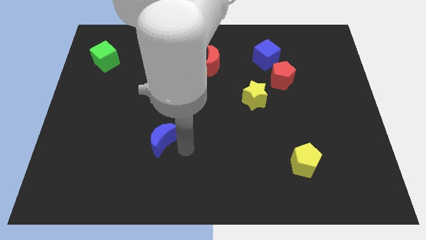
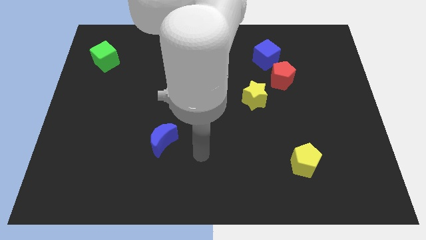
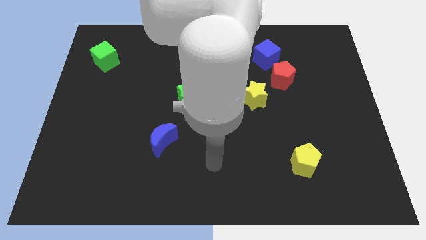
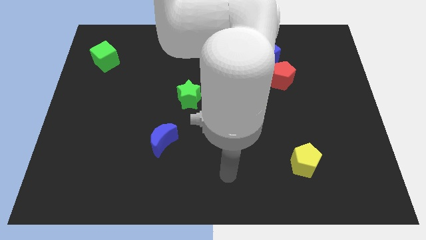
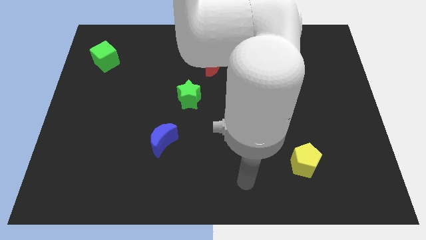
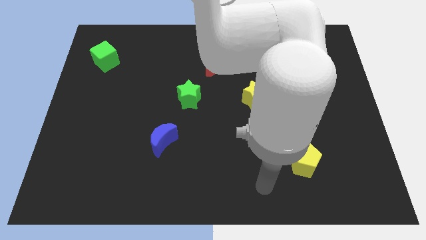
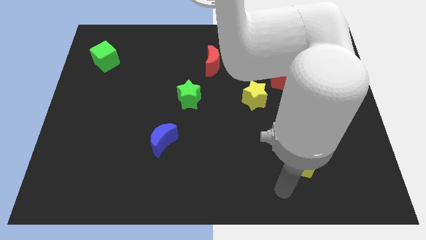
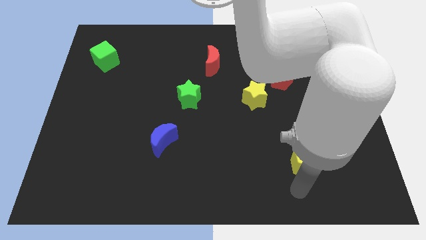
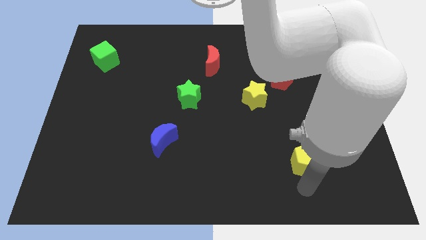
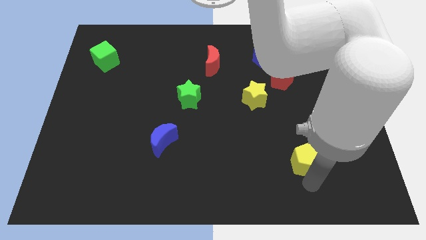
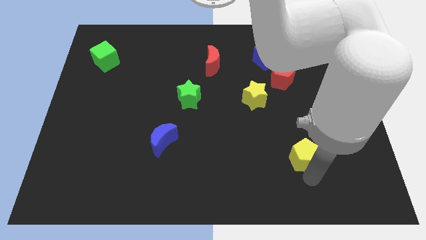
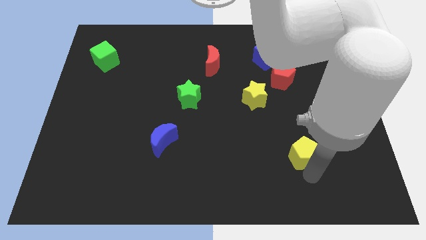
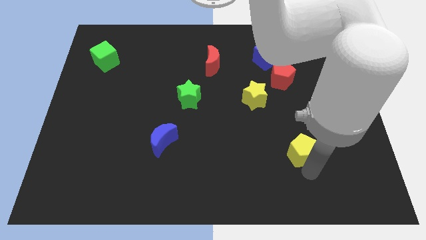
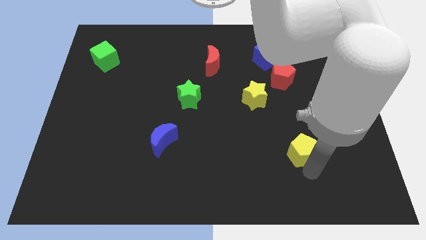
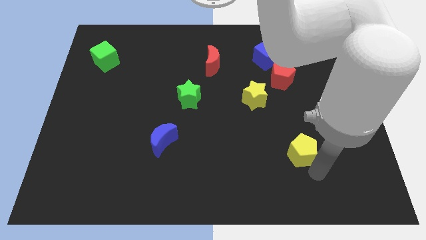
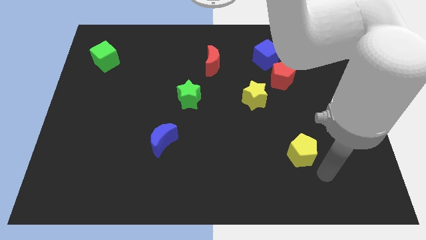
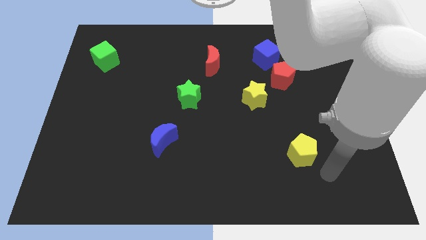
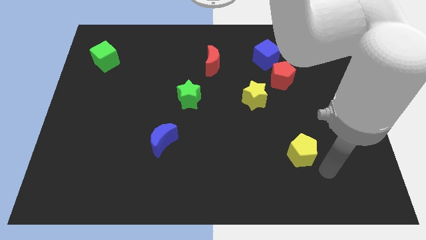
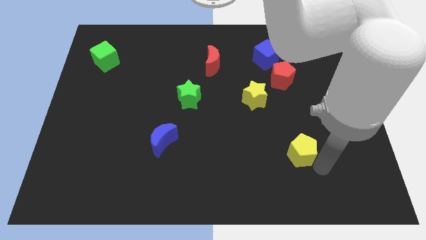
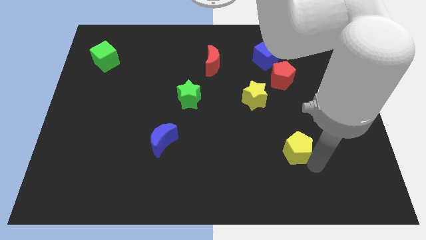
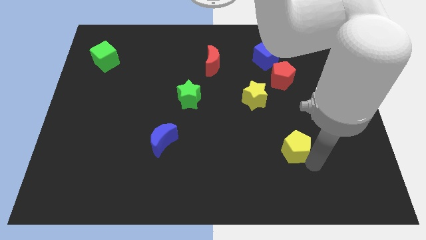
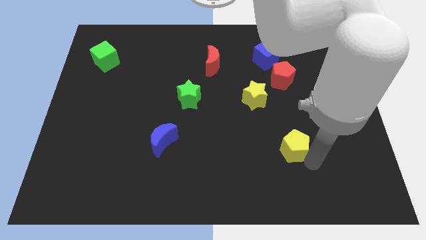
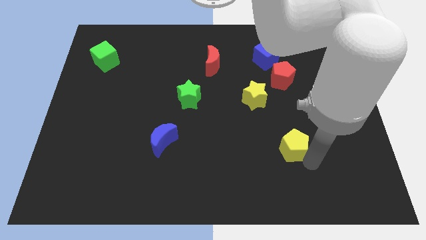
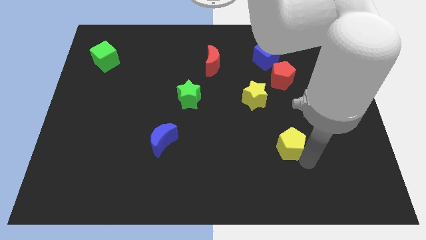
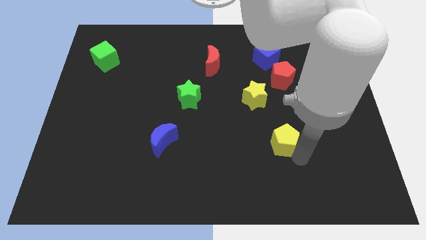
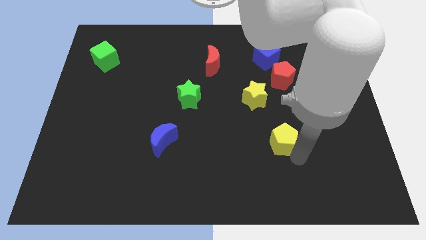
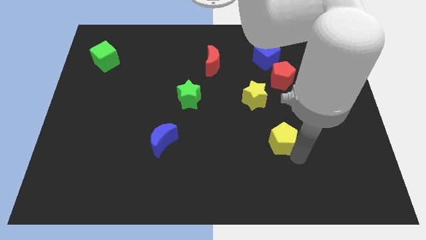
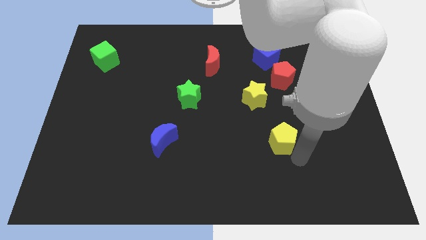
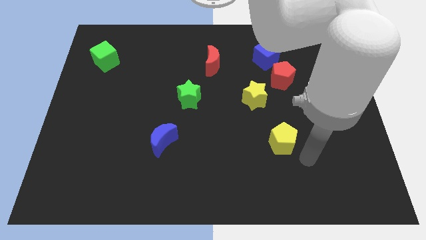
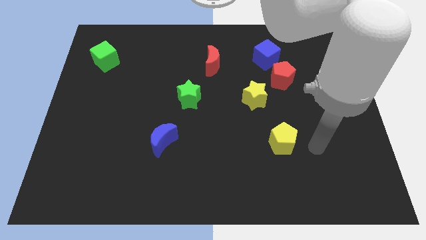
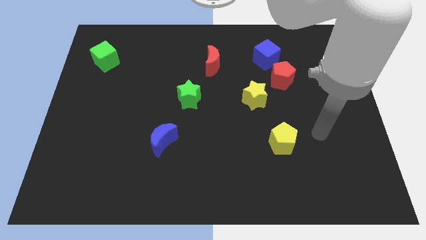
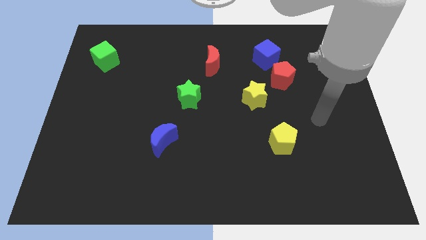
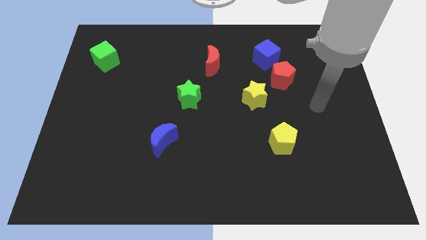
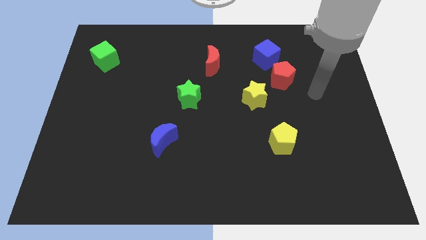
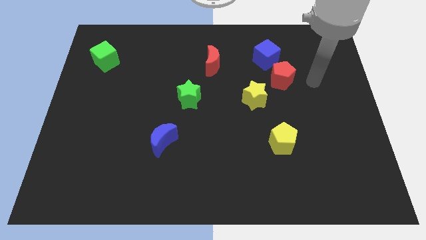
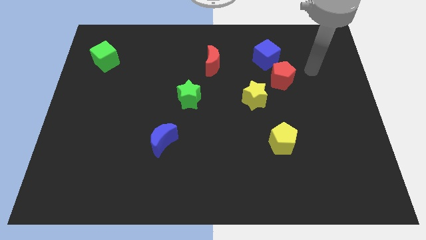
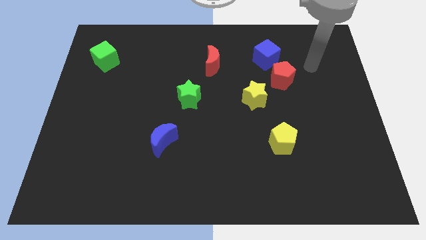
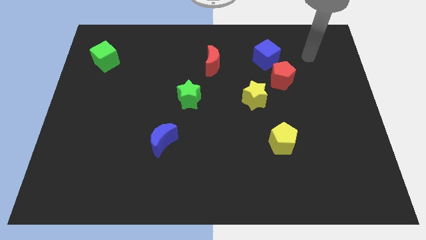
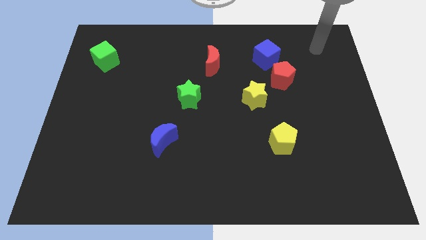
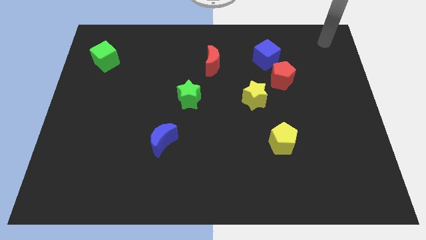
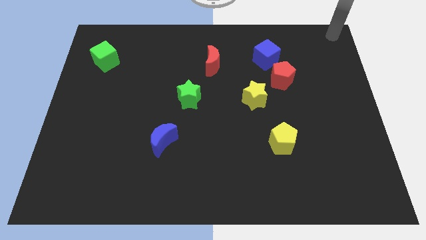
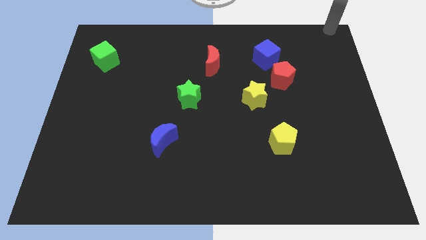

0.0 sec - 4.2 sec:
place the pentagon right to the blue moon

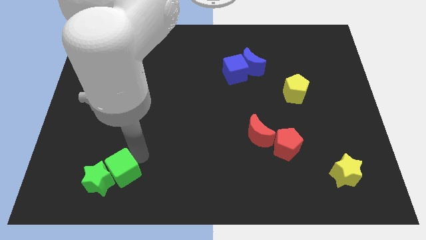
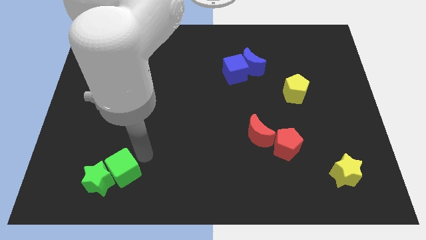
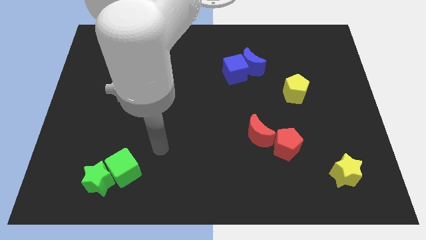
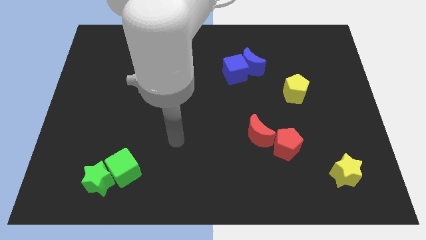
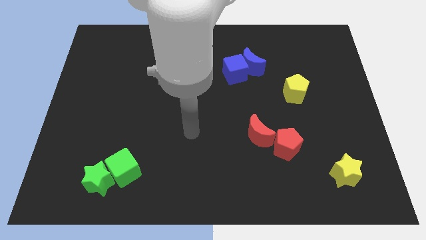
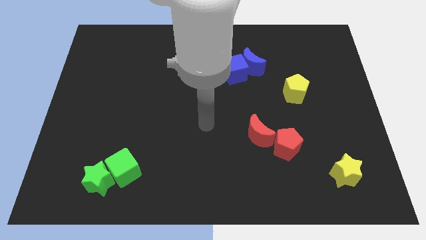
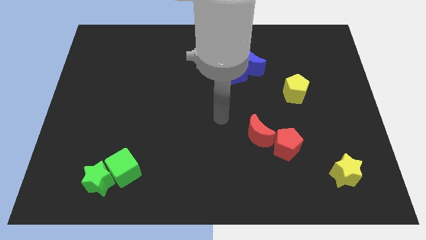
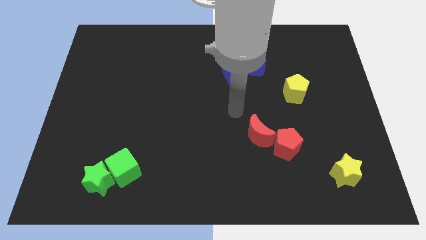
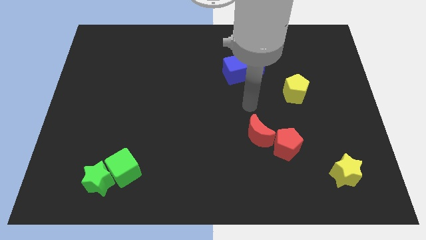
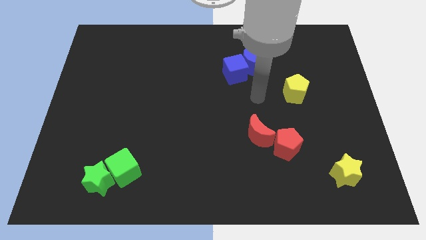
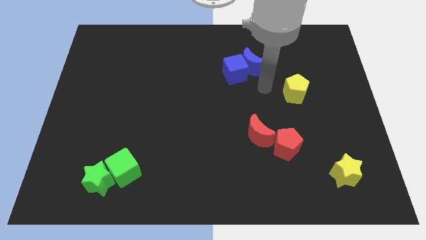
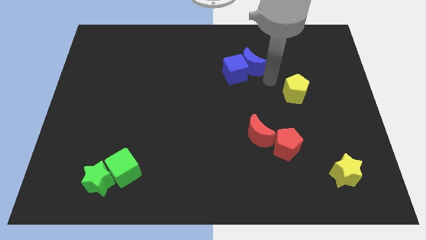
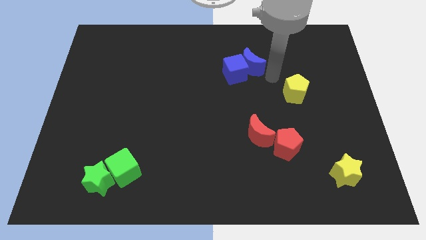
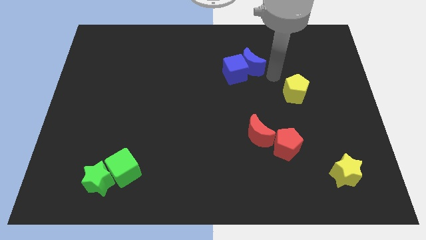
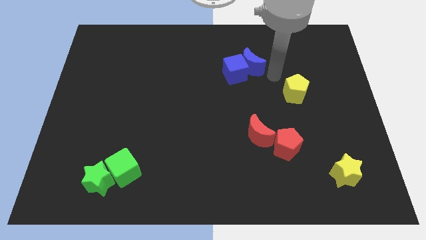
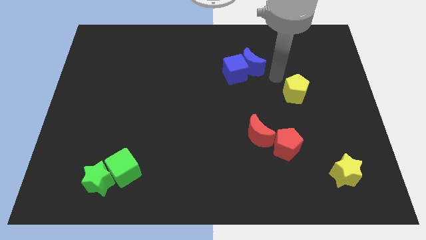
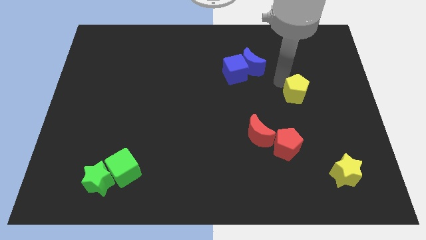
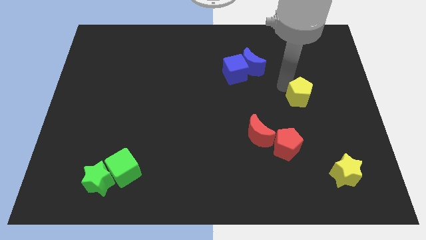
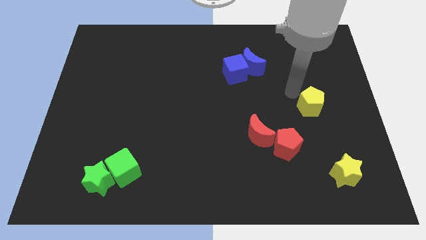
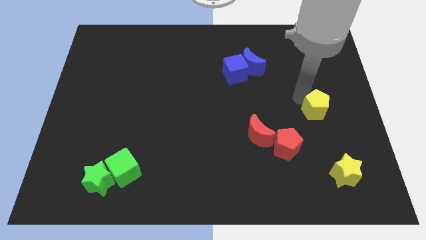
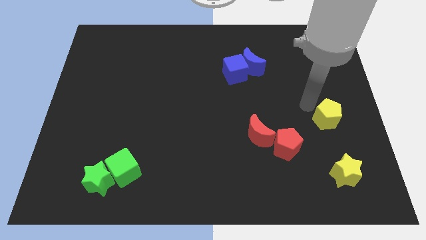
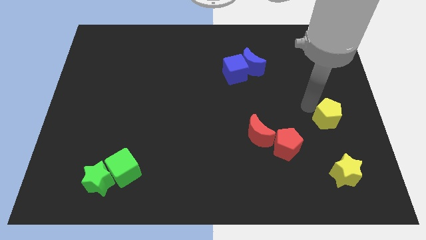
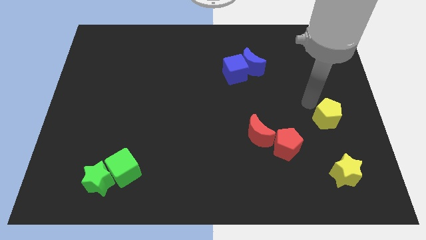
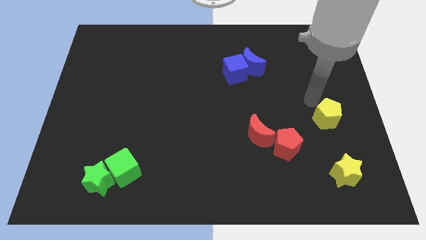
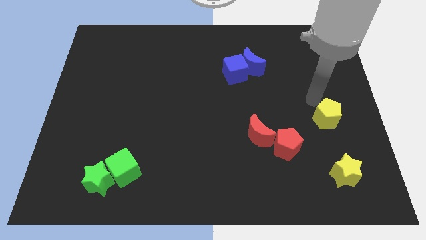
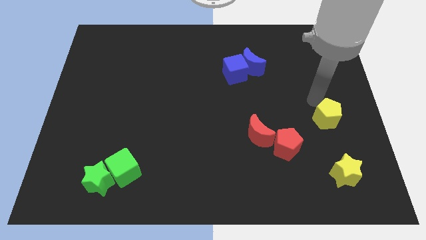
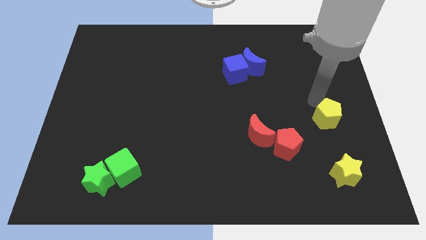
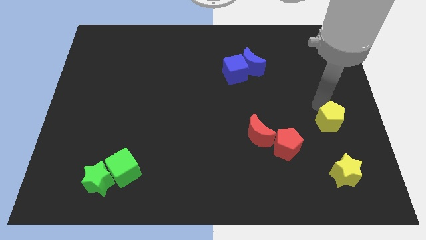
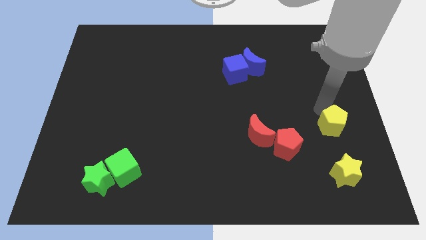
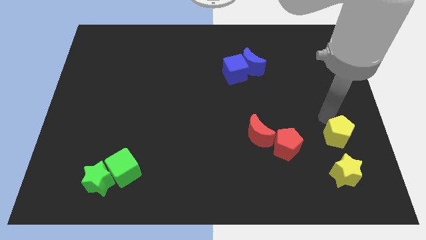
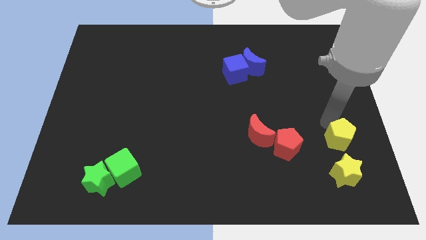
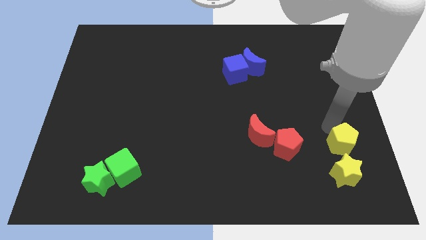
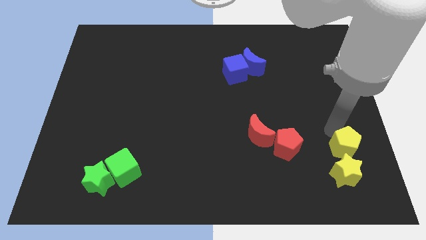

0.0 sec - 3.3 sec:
move the yellow pentagon to the top of the yellow star

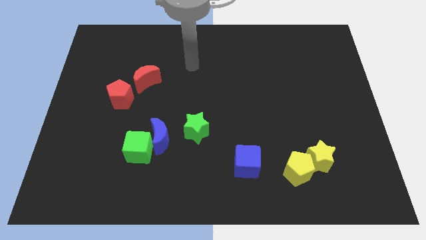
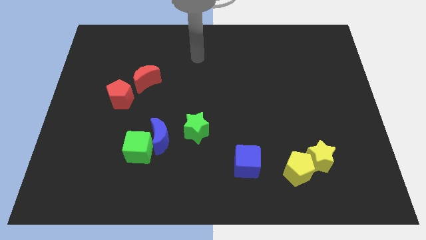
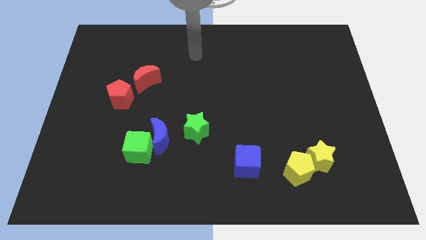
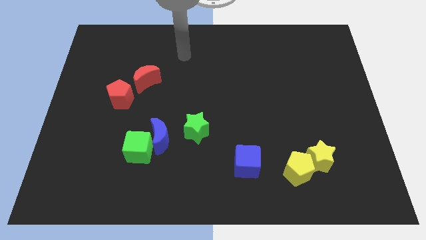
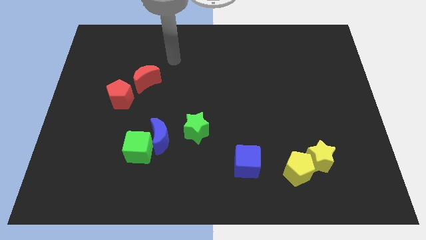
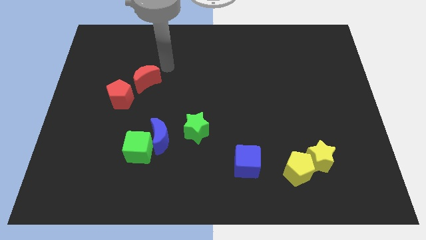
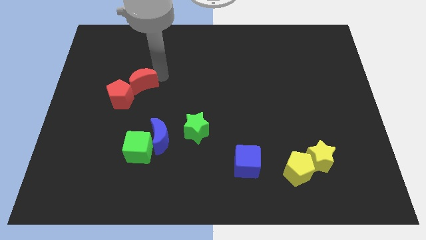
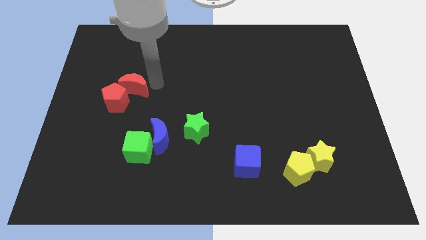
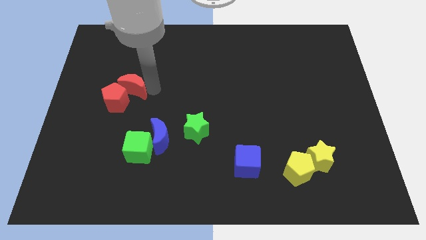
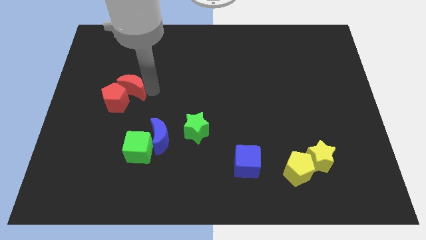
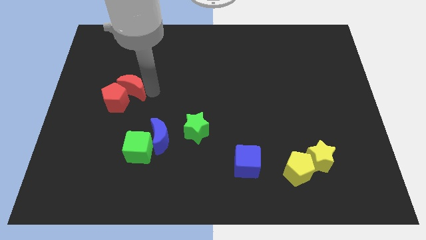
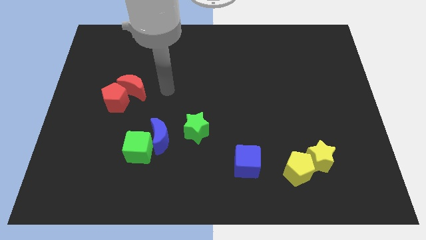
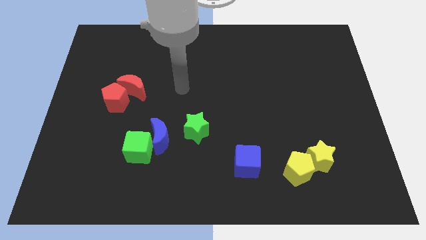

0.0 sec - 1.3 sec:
put red blocks together

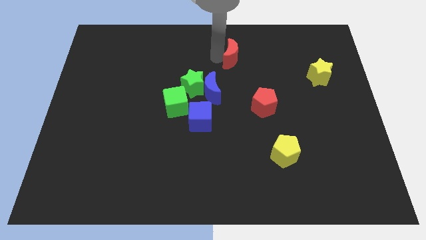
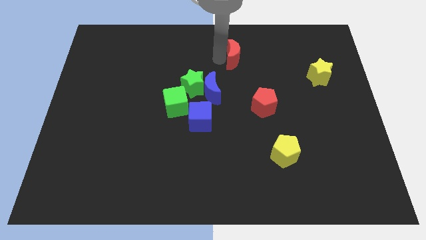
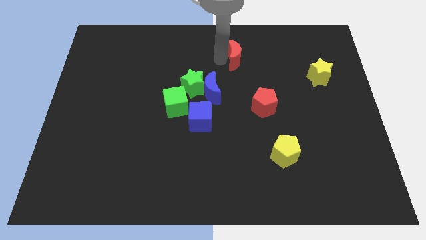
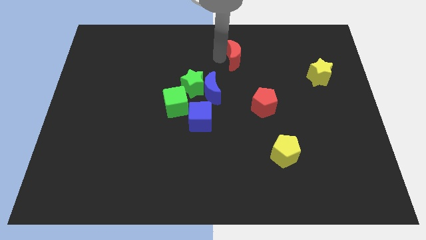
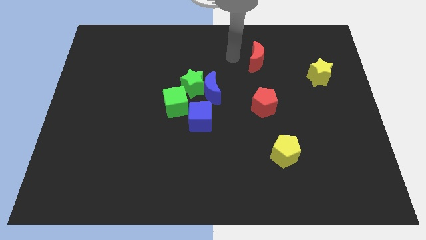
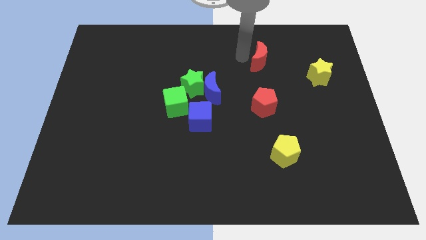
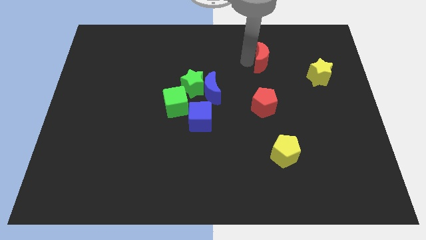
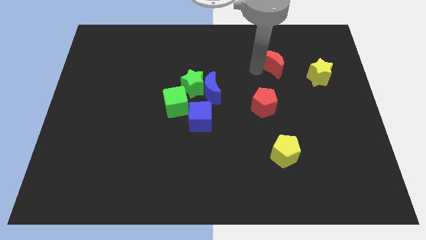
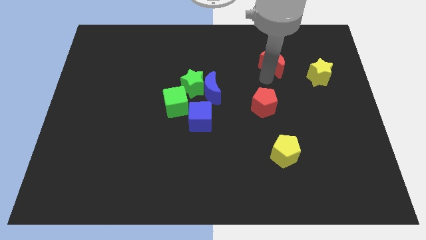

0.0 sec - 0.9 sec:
move red moon right above the red pentagon
